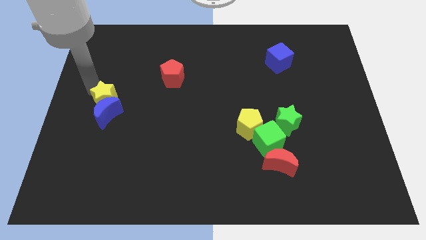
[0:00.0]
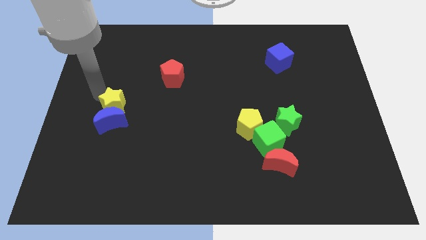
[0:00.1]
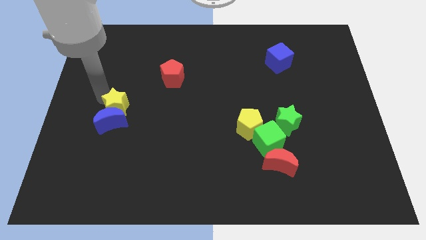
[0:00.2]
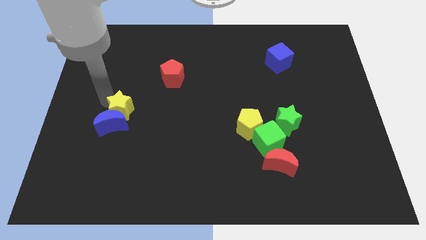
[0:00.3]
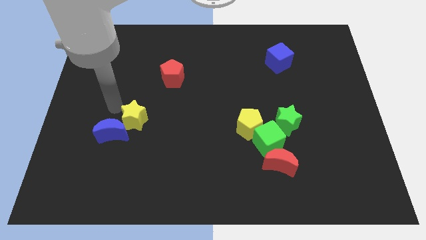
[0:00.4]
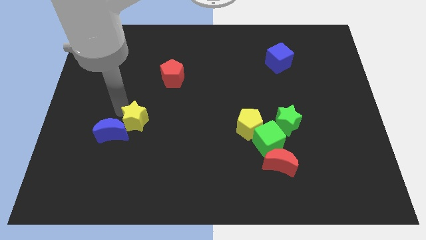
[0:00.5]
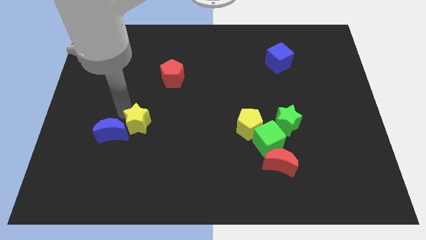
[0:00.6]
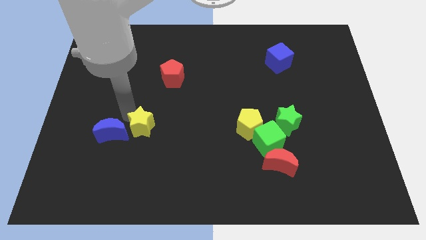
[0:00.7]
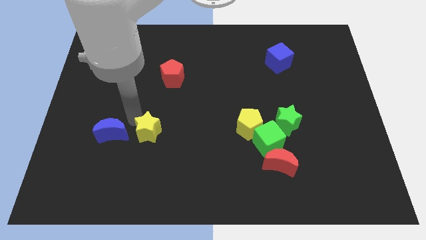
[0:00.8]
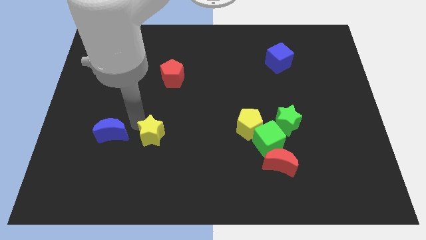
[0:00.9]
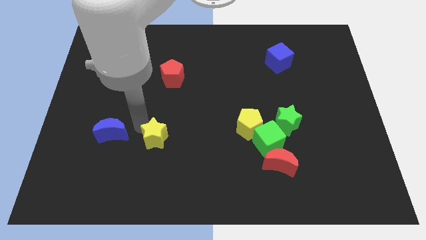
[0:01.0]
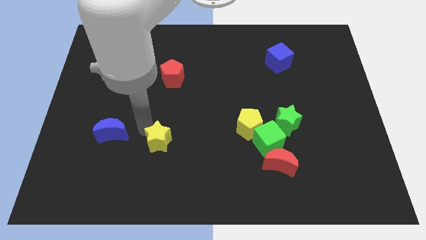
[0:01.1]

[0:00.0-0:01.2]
push the yellow star to the bottom of the board

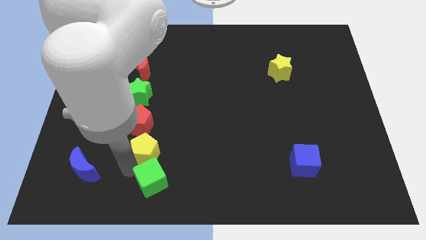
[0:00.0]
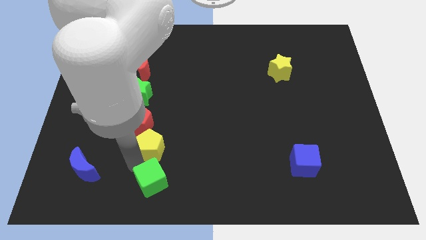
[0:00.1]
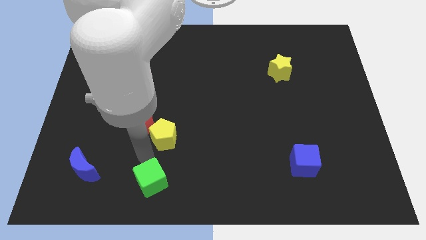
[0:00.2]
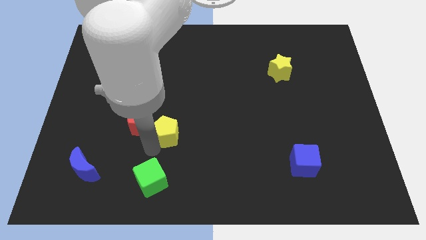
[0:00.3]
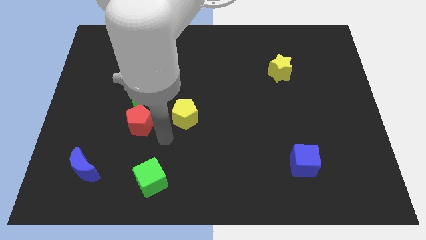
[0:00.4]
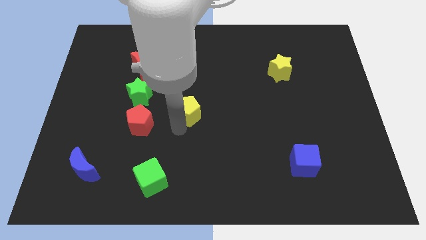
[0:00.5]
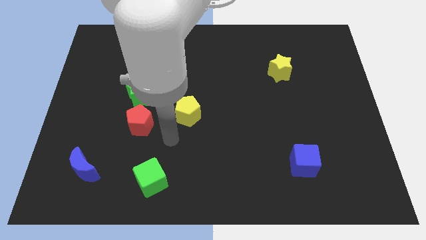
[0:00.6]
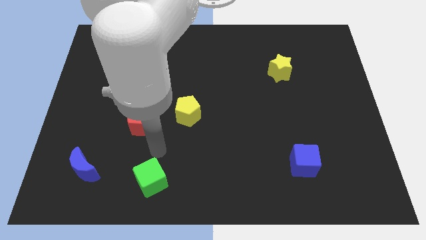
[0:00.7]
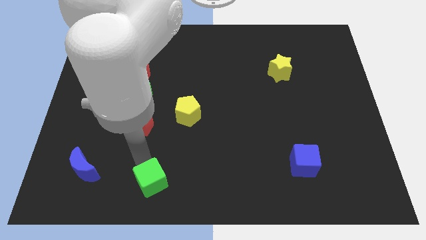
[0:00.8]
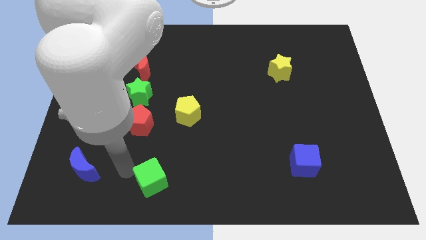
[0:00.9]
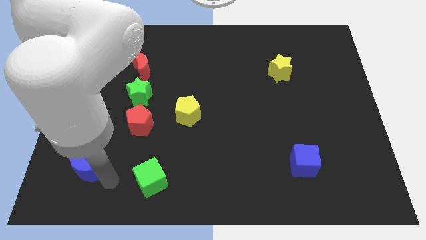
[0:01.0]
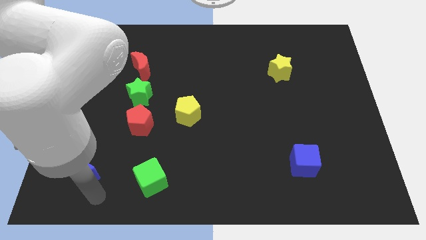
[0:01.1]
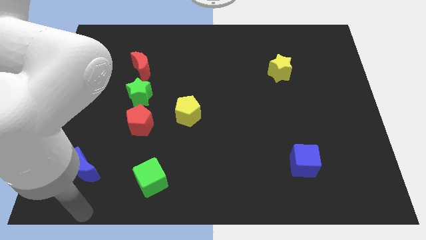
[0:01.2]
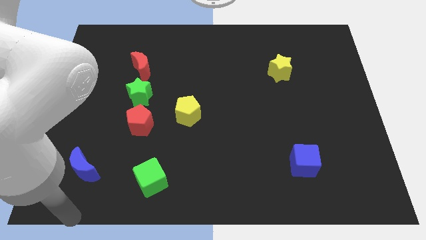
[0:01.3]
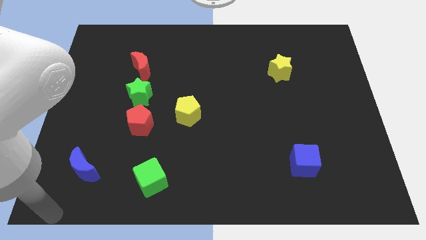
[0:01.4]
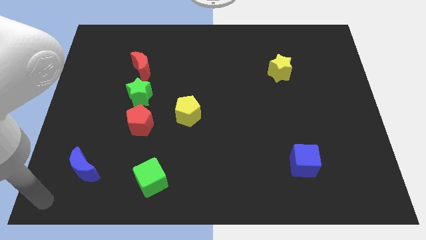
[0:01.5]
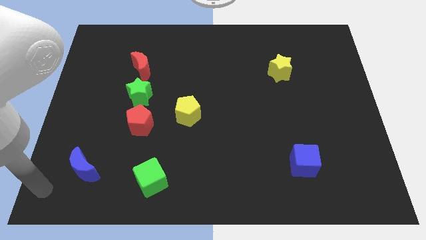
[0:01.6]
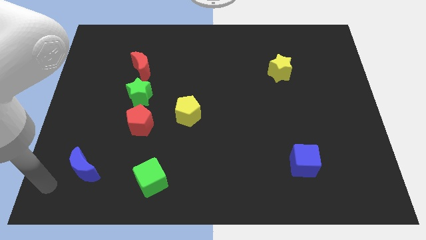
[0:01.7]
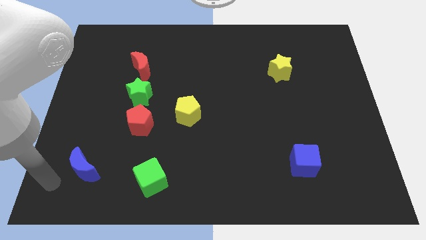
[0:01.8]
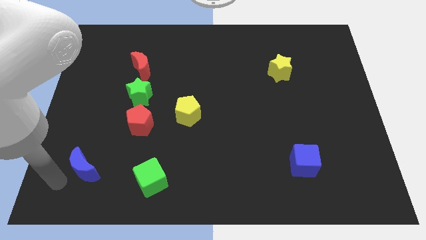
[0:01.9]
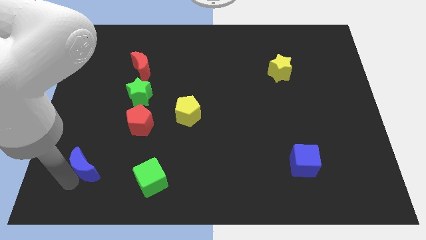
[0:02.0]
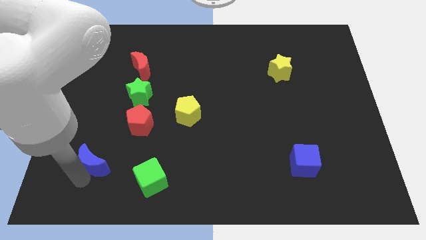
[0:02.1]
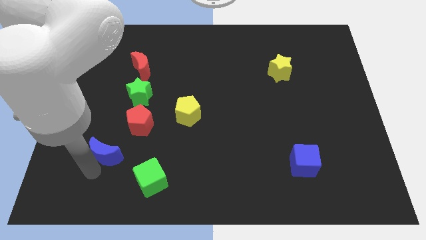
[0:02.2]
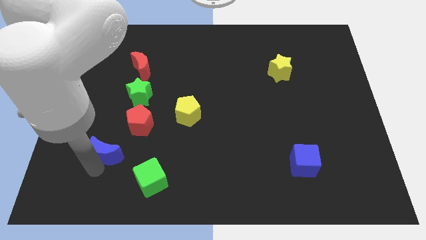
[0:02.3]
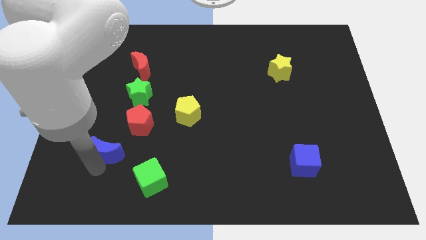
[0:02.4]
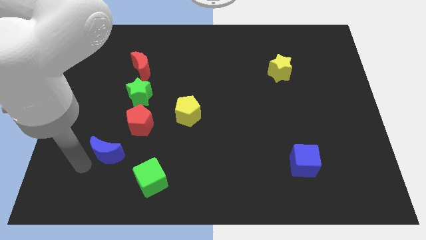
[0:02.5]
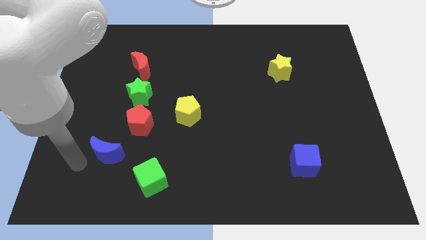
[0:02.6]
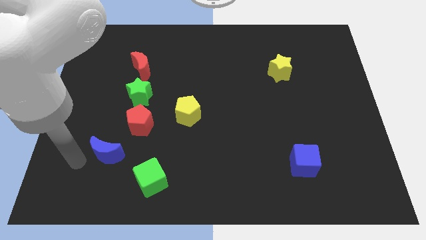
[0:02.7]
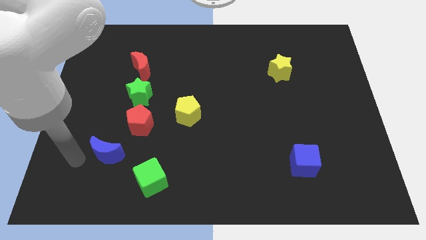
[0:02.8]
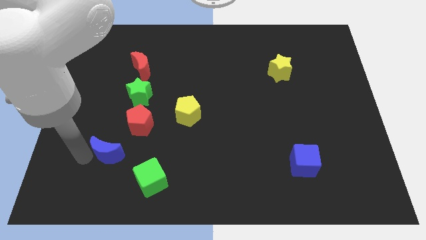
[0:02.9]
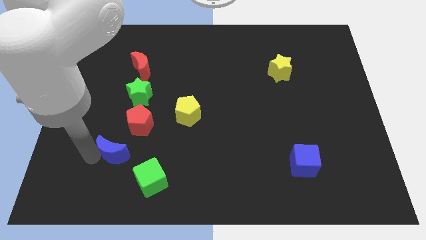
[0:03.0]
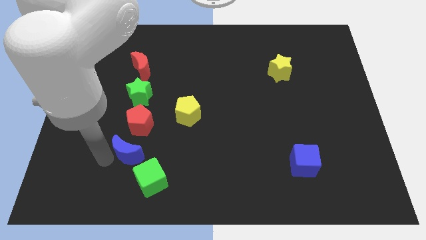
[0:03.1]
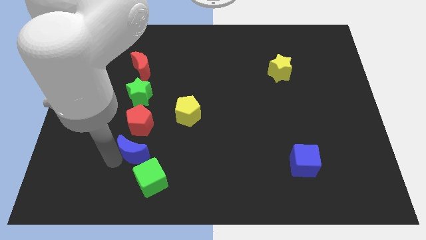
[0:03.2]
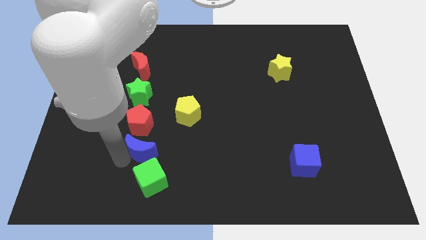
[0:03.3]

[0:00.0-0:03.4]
place the blue crescent in between the green cube and the red pentagon

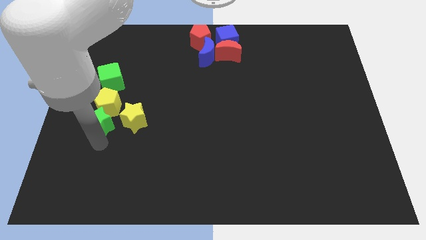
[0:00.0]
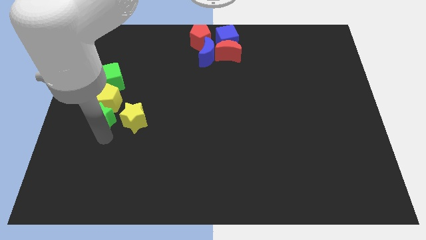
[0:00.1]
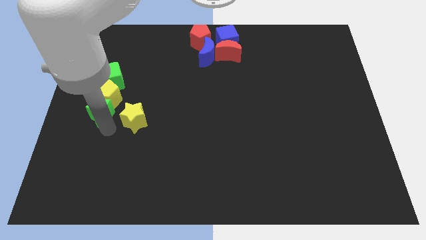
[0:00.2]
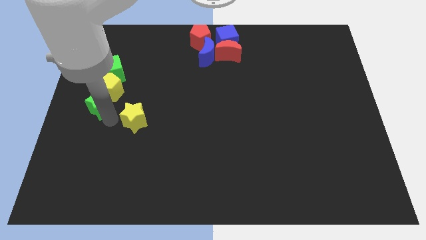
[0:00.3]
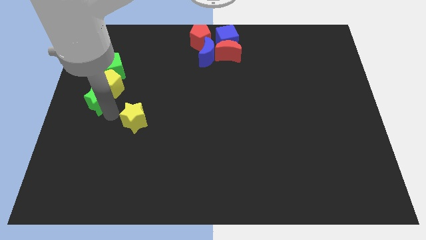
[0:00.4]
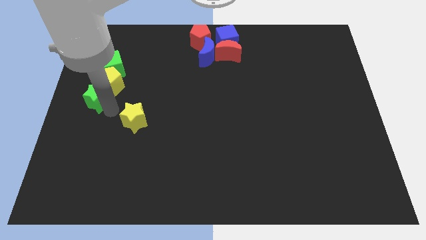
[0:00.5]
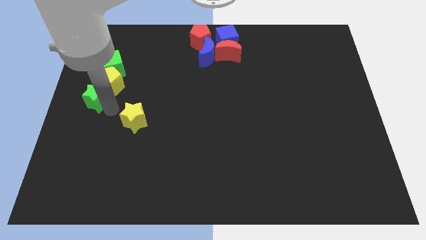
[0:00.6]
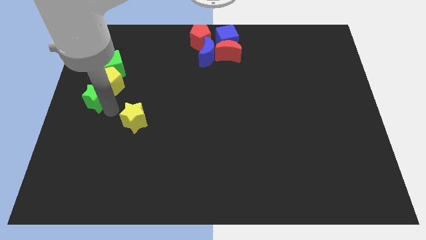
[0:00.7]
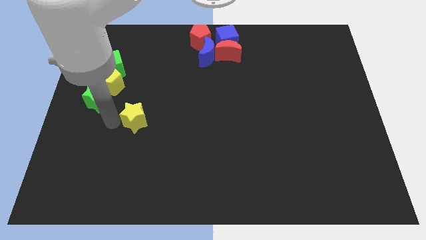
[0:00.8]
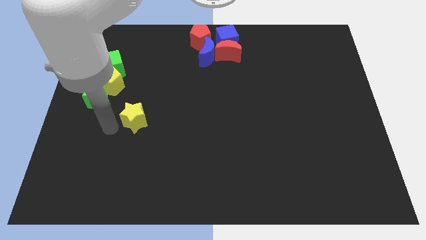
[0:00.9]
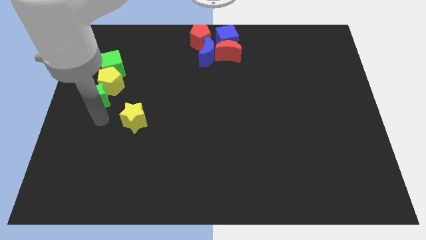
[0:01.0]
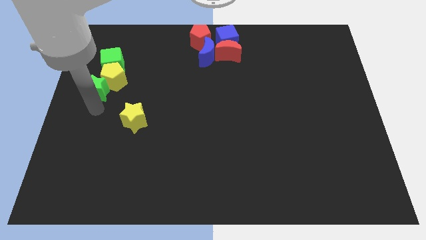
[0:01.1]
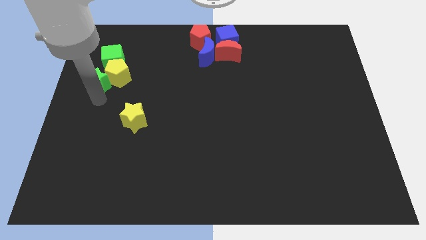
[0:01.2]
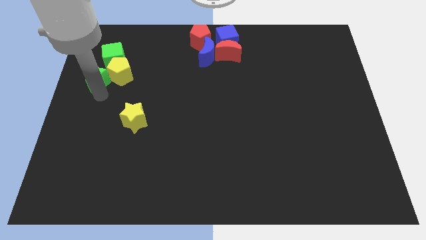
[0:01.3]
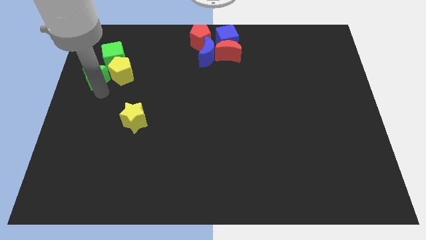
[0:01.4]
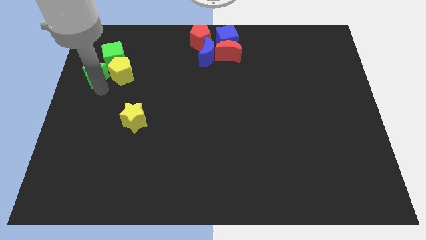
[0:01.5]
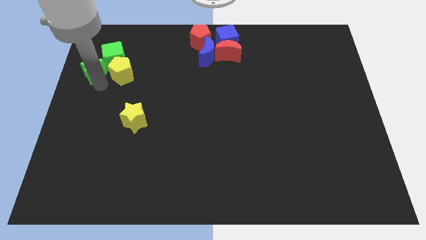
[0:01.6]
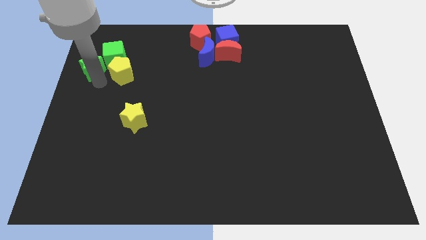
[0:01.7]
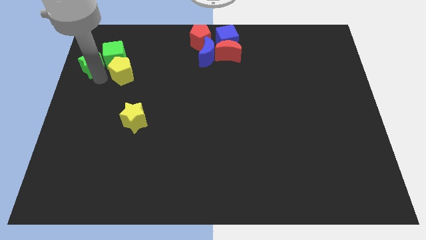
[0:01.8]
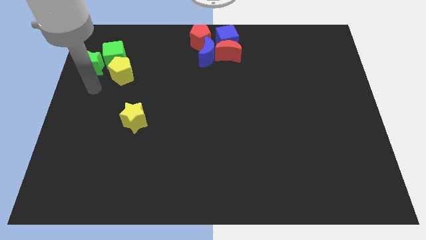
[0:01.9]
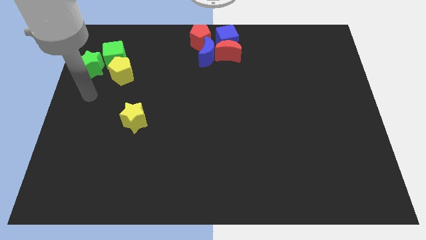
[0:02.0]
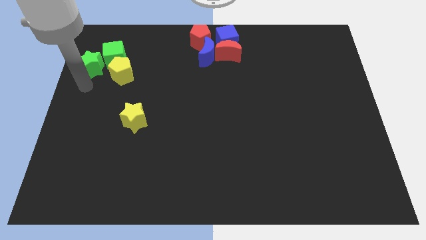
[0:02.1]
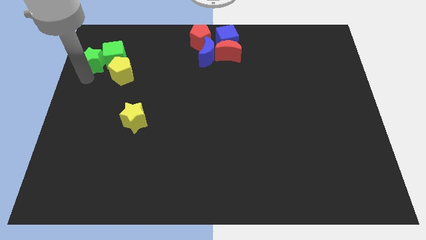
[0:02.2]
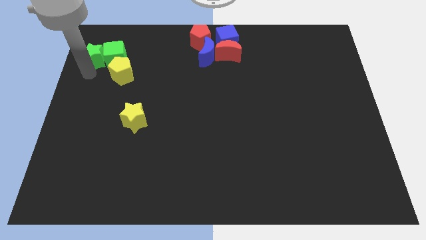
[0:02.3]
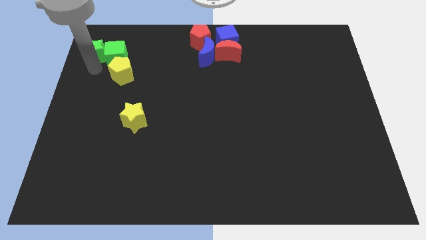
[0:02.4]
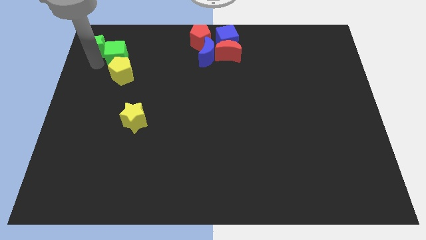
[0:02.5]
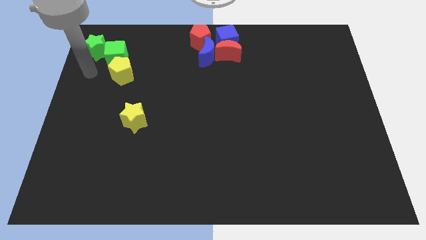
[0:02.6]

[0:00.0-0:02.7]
drag the green star to the top left

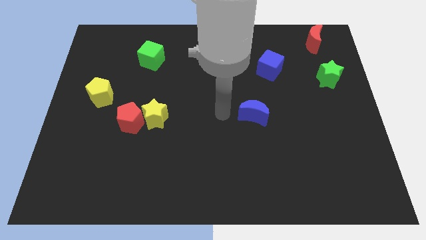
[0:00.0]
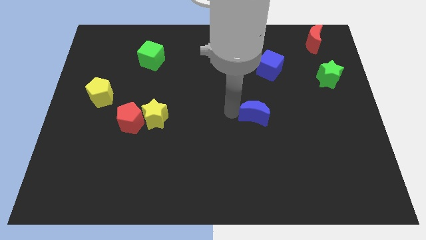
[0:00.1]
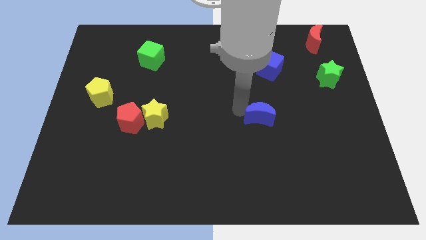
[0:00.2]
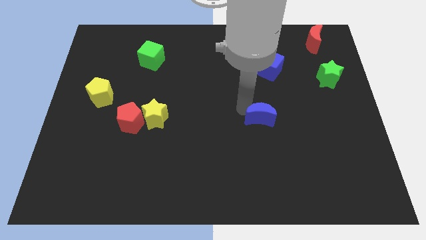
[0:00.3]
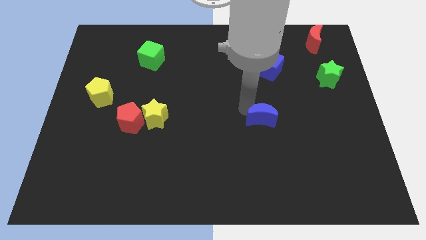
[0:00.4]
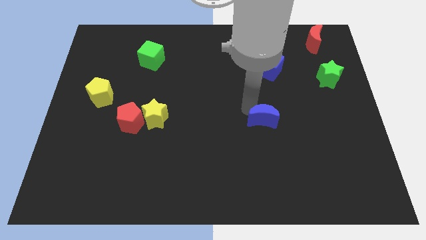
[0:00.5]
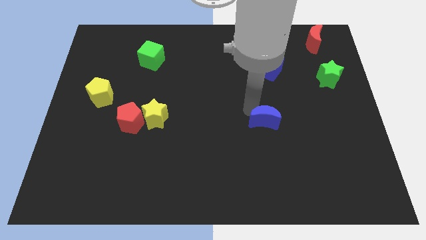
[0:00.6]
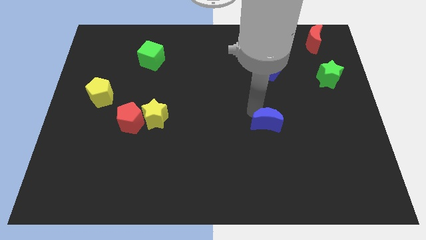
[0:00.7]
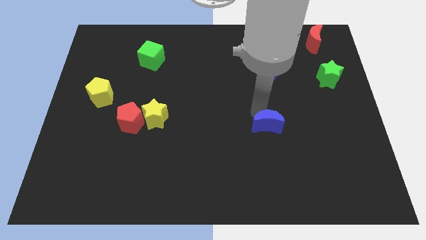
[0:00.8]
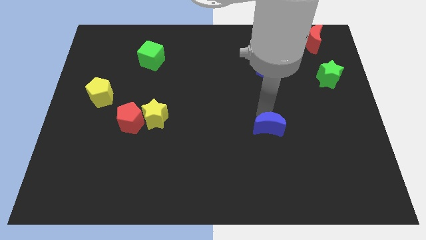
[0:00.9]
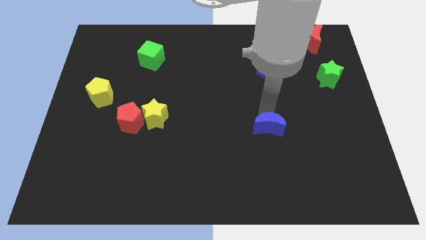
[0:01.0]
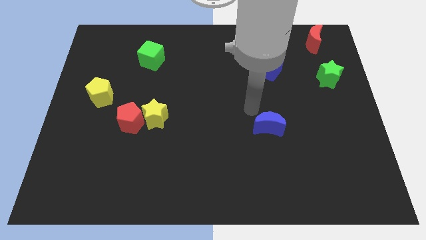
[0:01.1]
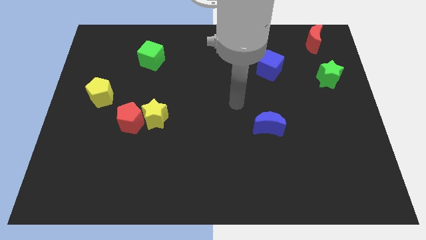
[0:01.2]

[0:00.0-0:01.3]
push the blue moon downward

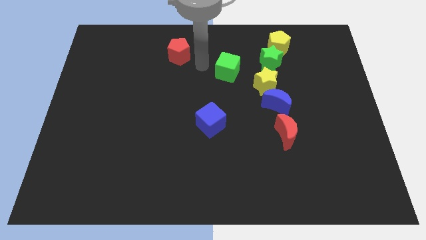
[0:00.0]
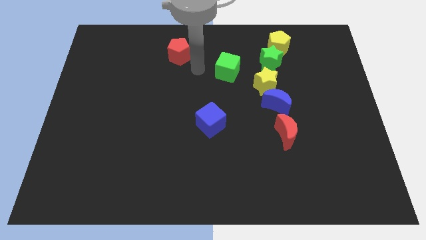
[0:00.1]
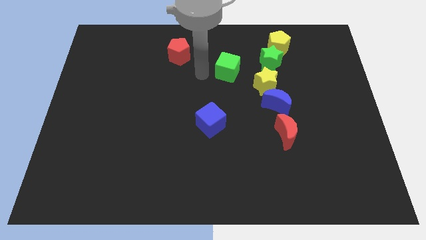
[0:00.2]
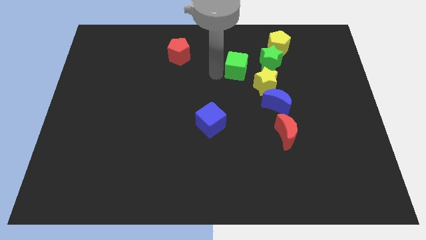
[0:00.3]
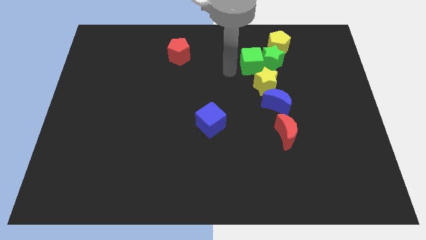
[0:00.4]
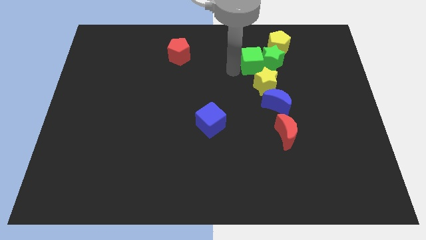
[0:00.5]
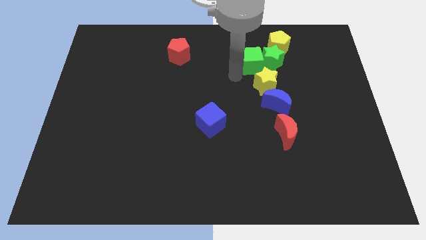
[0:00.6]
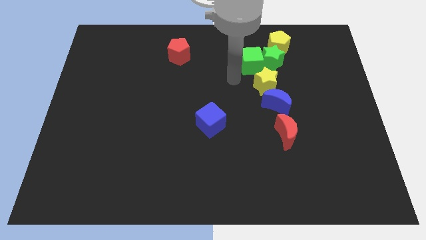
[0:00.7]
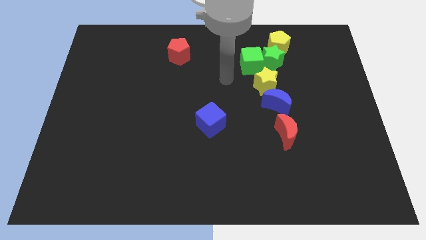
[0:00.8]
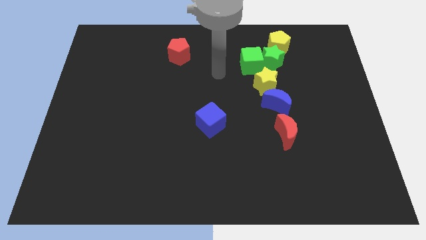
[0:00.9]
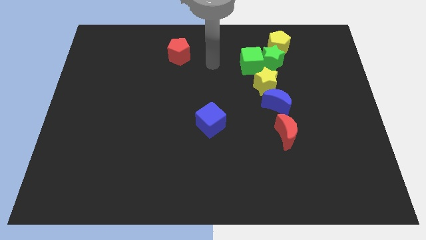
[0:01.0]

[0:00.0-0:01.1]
push green cube into green star
